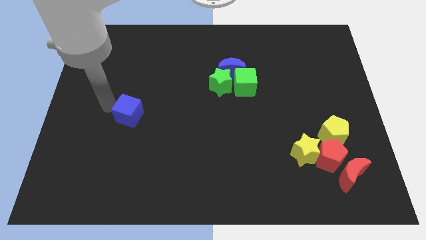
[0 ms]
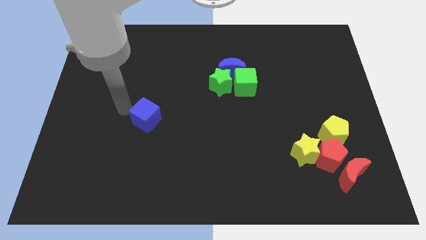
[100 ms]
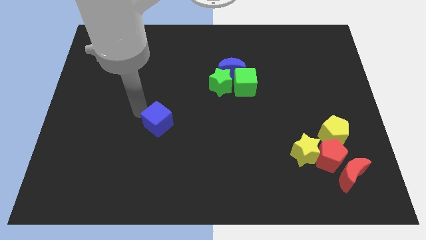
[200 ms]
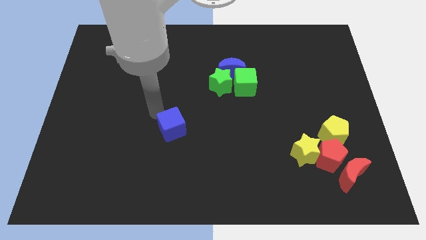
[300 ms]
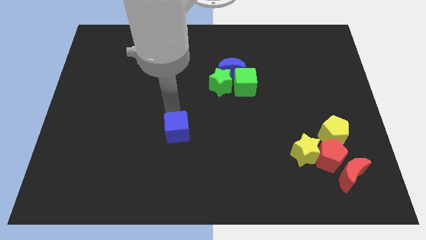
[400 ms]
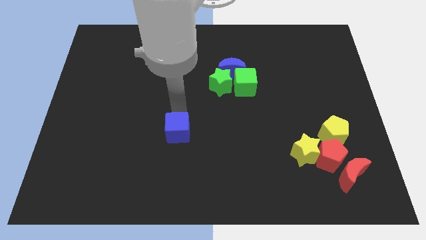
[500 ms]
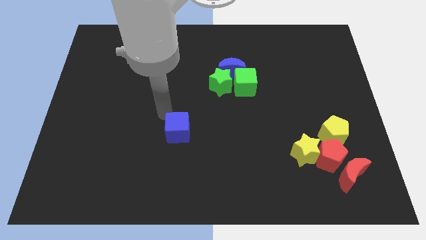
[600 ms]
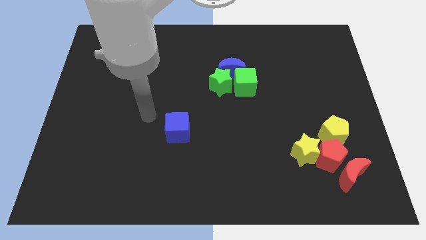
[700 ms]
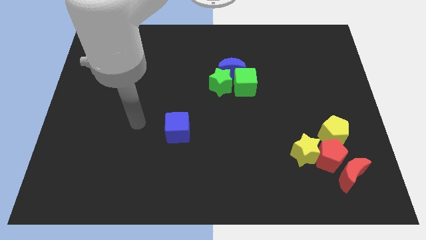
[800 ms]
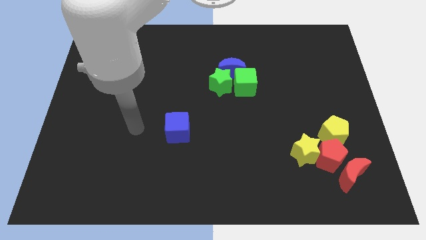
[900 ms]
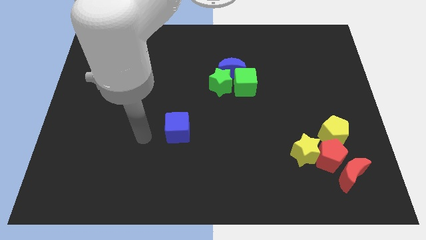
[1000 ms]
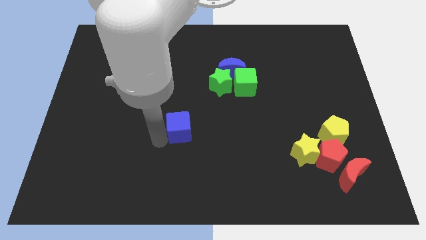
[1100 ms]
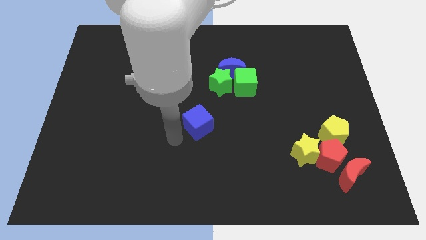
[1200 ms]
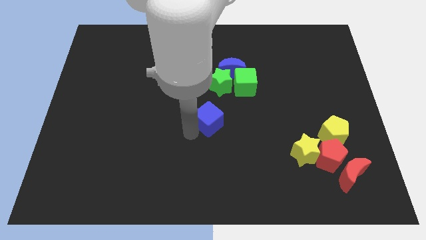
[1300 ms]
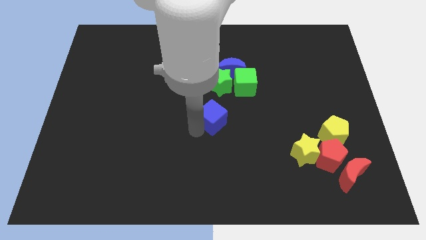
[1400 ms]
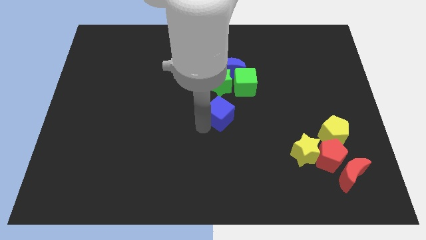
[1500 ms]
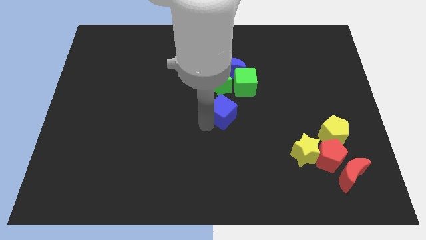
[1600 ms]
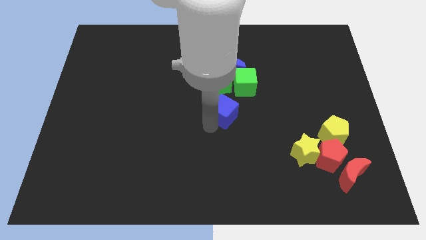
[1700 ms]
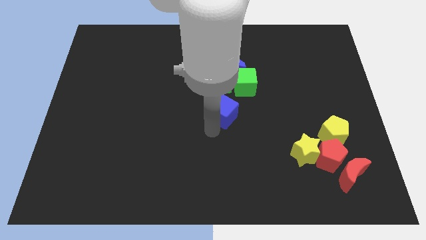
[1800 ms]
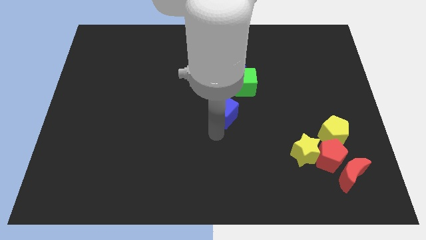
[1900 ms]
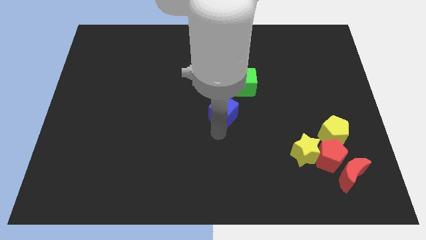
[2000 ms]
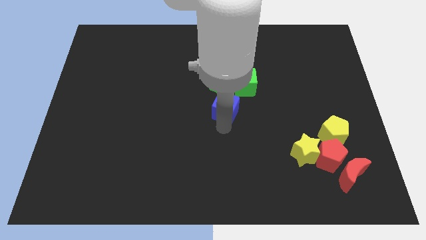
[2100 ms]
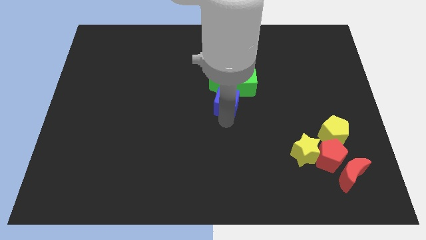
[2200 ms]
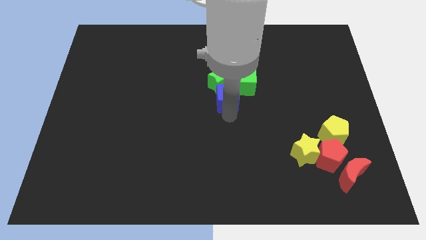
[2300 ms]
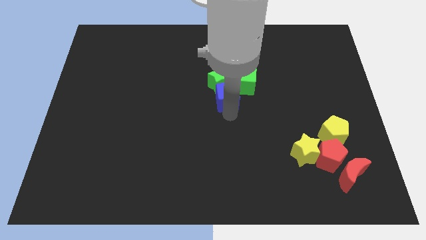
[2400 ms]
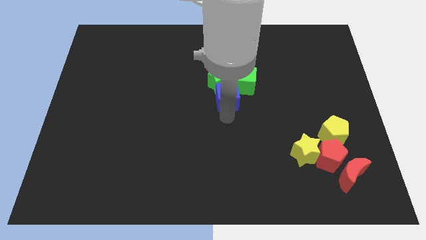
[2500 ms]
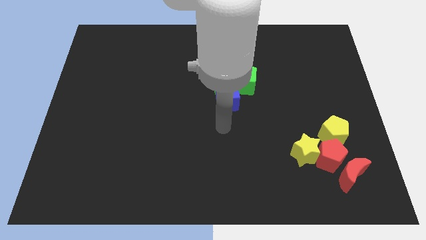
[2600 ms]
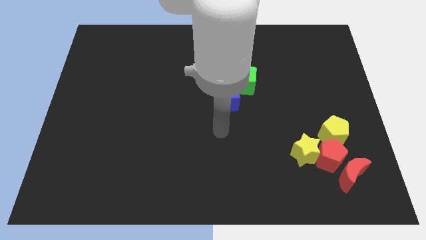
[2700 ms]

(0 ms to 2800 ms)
move the blue cube into the green blocks

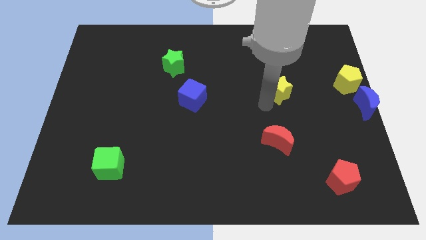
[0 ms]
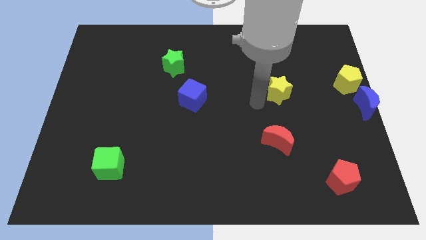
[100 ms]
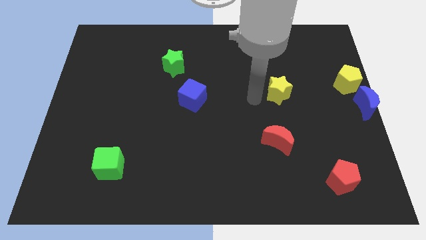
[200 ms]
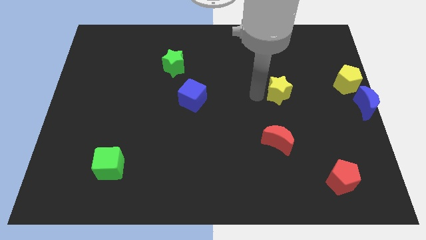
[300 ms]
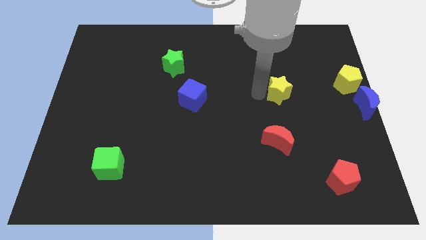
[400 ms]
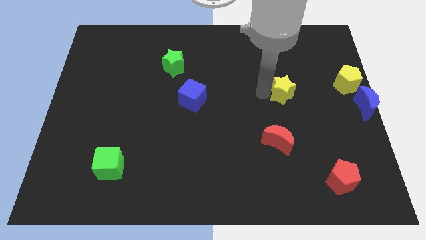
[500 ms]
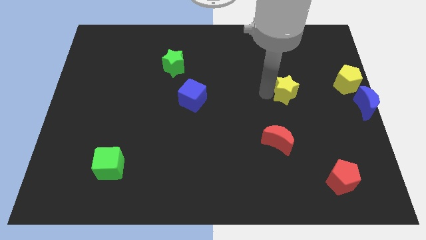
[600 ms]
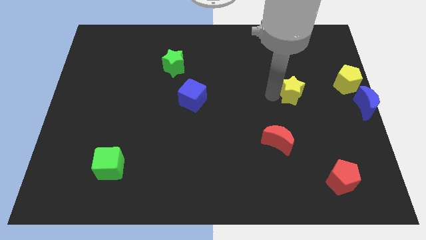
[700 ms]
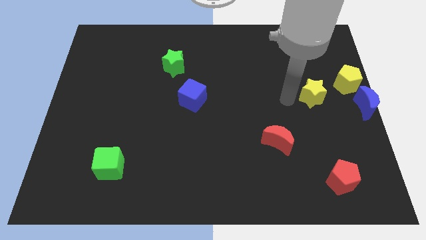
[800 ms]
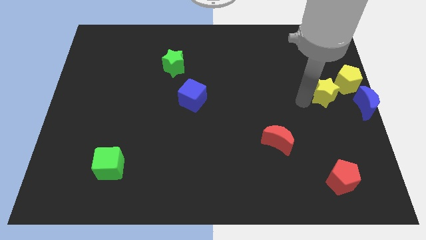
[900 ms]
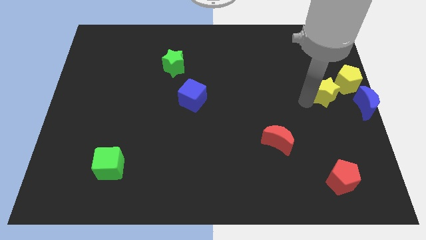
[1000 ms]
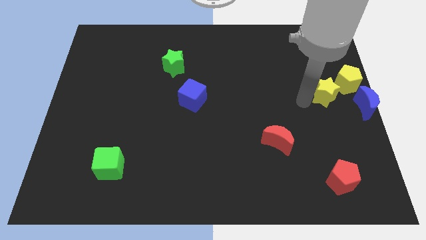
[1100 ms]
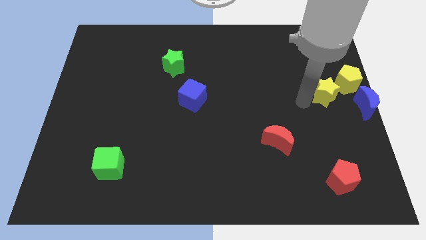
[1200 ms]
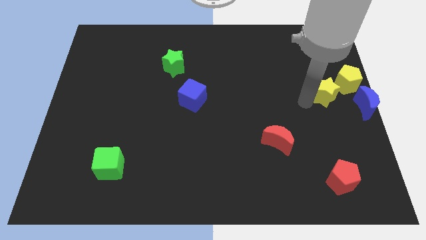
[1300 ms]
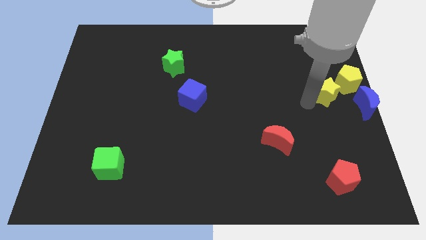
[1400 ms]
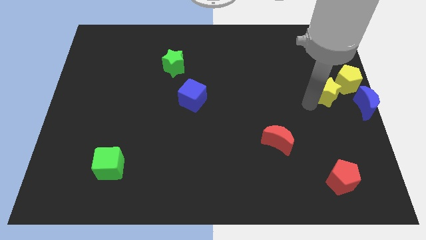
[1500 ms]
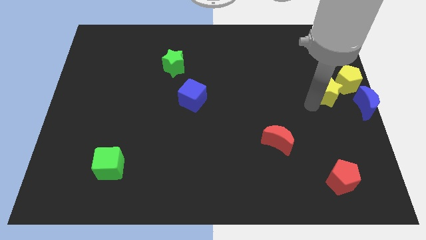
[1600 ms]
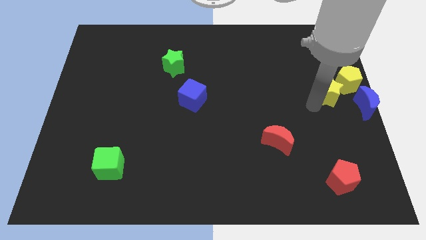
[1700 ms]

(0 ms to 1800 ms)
place the yellow star close to the yellow pentagon

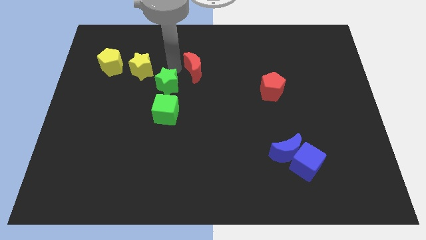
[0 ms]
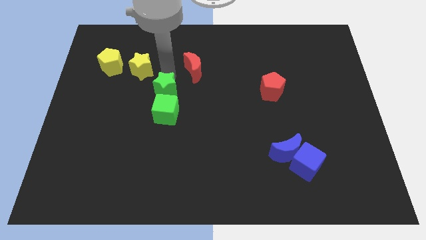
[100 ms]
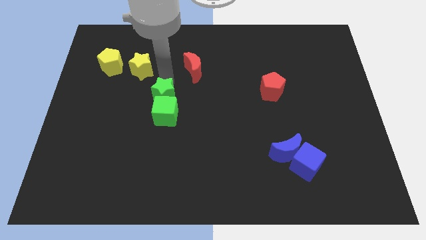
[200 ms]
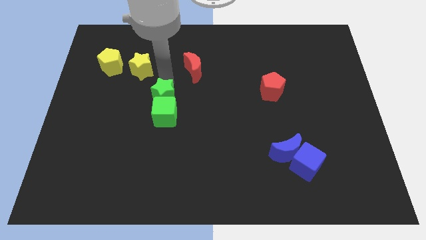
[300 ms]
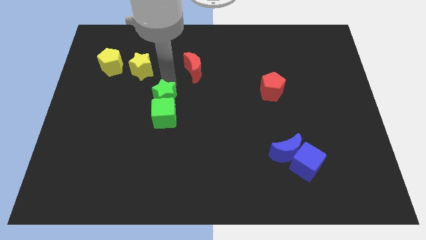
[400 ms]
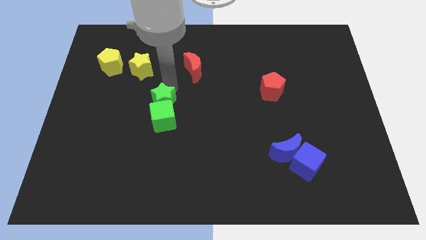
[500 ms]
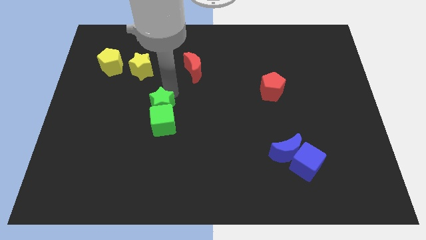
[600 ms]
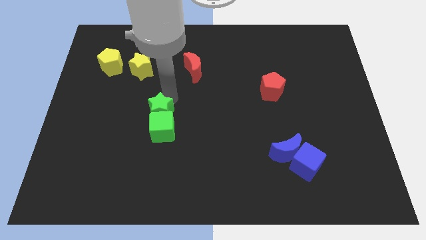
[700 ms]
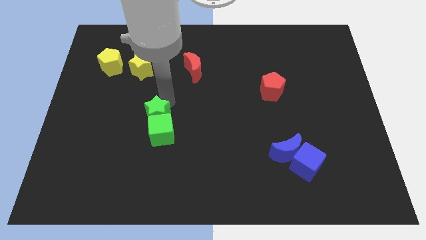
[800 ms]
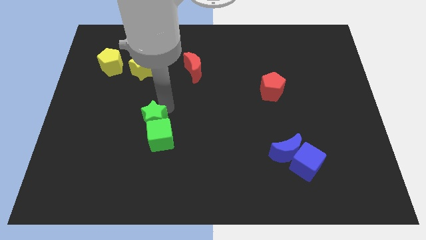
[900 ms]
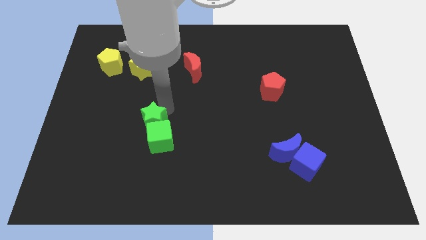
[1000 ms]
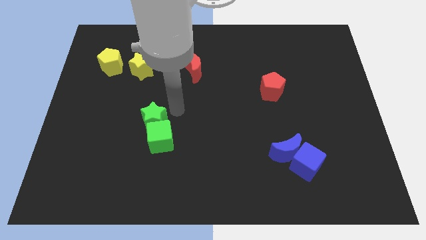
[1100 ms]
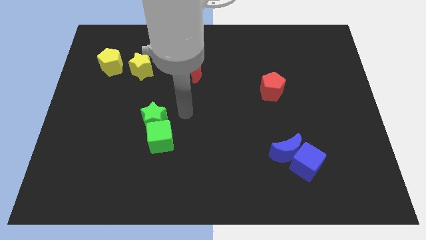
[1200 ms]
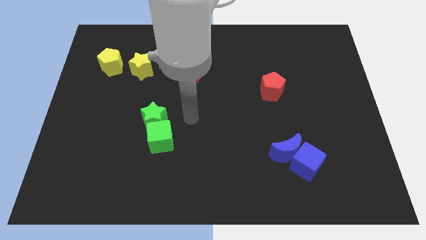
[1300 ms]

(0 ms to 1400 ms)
push the the green cube with green star

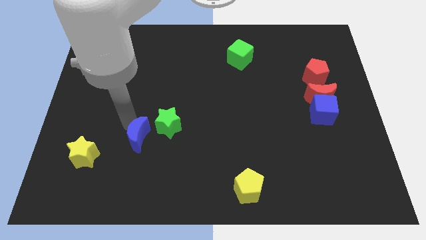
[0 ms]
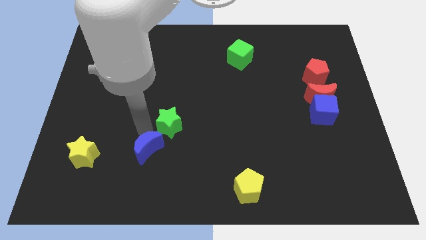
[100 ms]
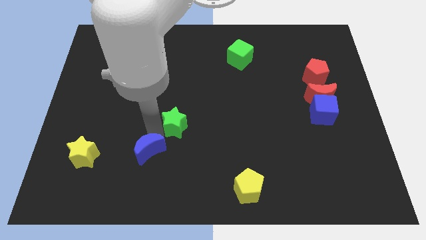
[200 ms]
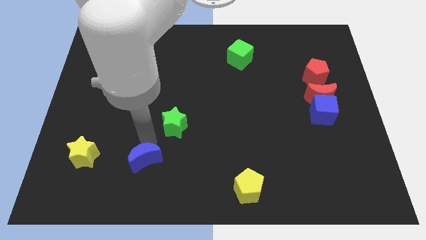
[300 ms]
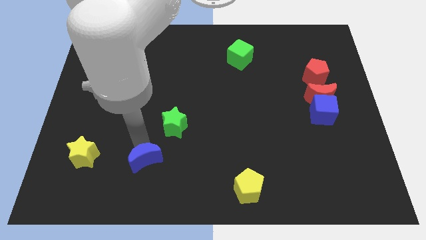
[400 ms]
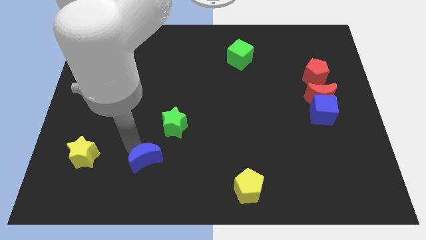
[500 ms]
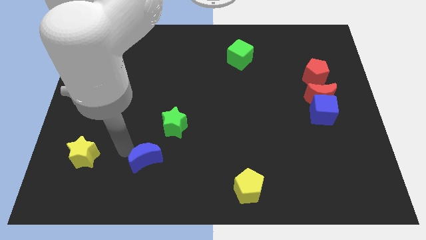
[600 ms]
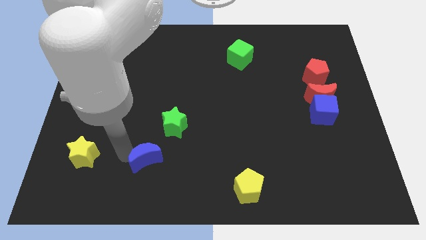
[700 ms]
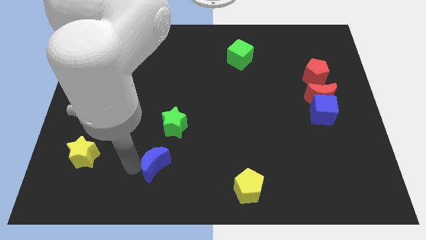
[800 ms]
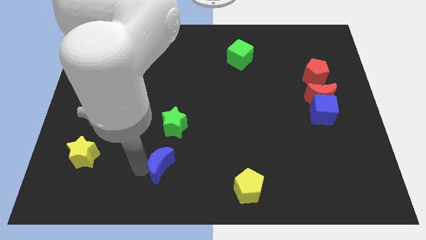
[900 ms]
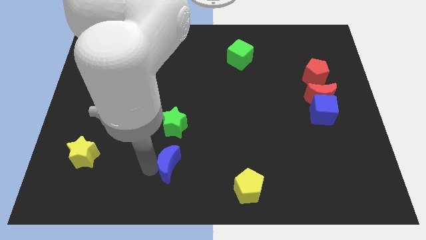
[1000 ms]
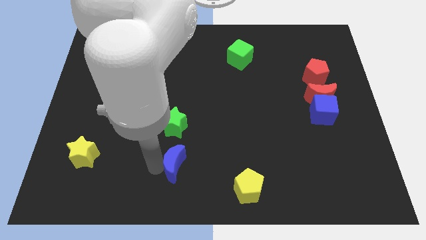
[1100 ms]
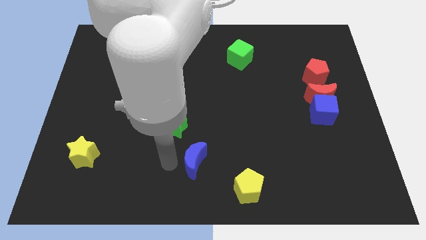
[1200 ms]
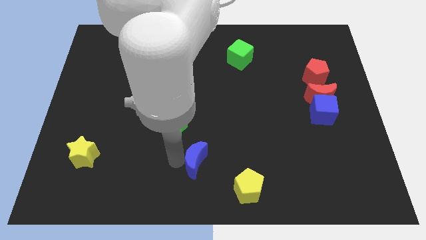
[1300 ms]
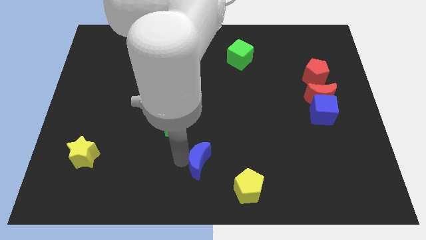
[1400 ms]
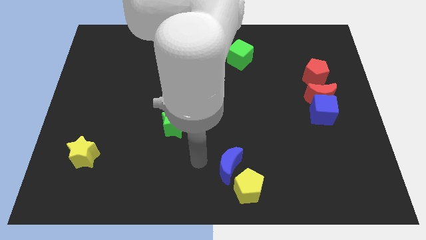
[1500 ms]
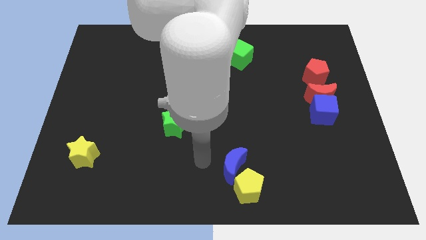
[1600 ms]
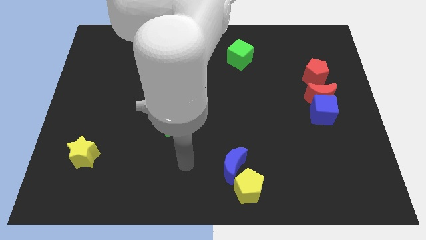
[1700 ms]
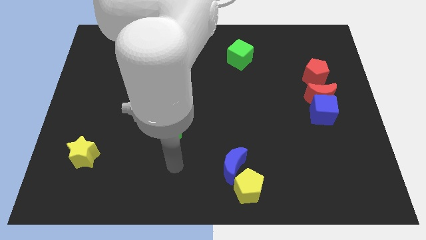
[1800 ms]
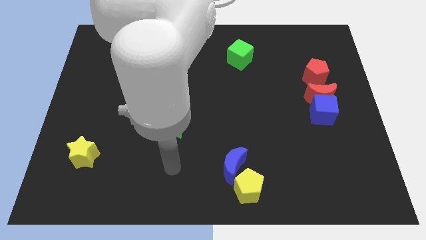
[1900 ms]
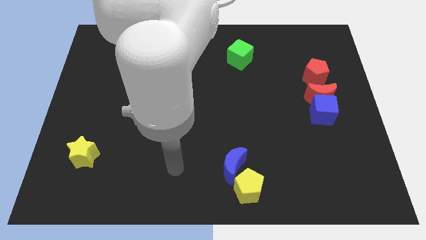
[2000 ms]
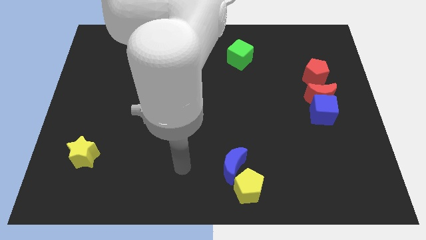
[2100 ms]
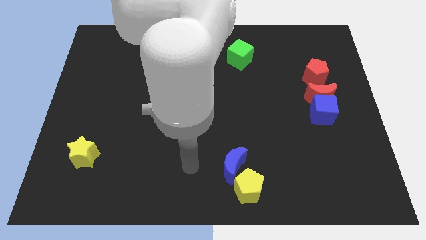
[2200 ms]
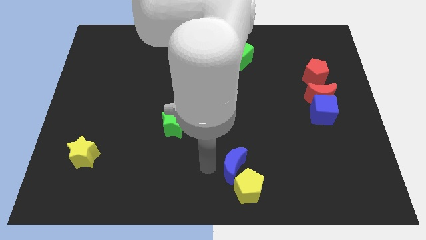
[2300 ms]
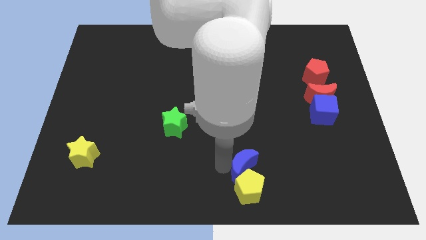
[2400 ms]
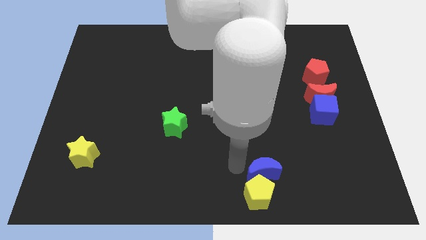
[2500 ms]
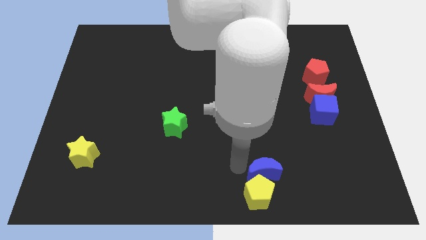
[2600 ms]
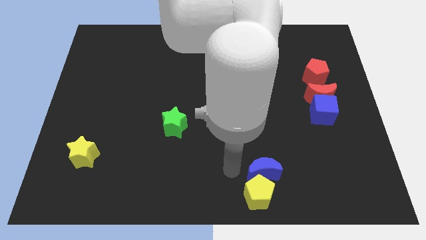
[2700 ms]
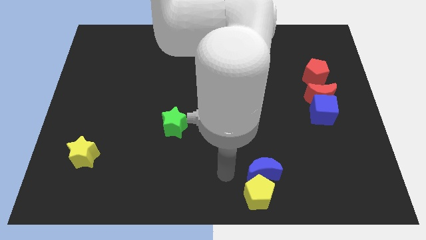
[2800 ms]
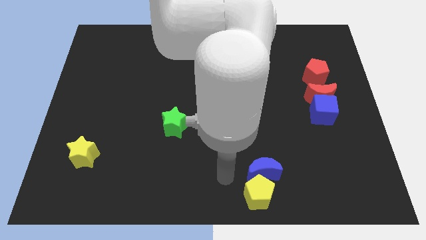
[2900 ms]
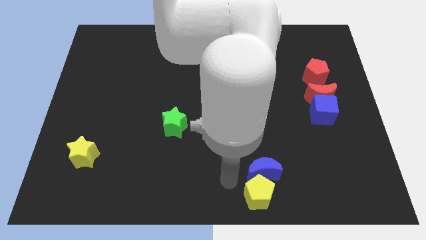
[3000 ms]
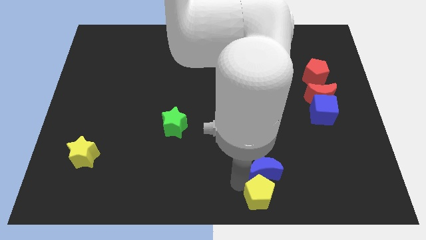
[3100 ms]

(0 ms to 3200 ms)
put the blue moon above the yellow pentagon
